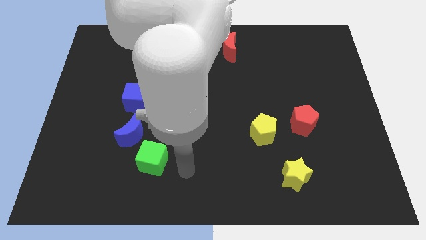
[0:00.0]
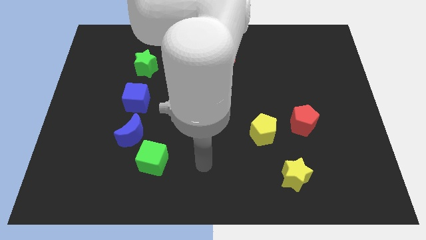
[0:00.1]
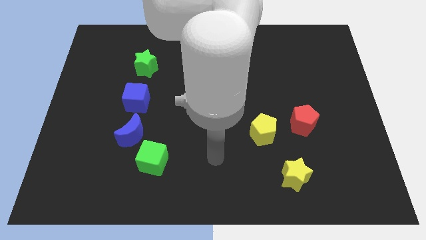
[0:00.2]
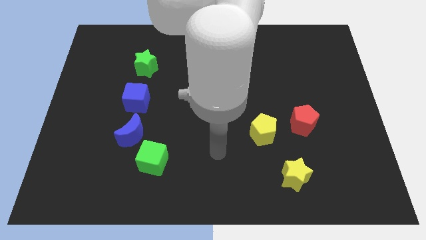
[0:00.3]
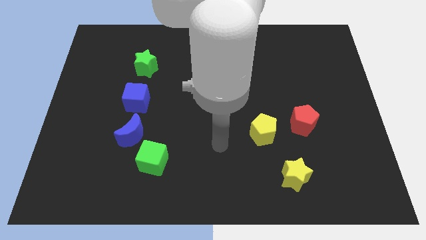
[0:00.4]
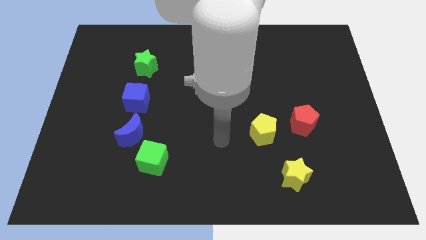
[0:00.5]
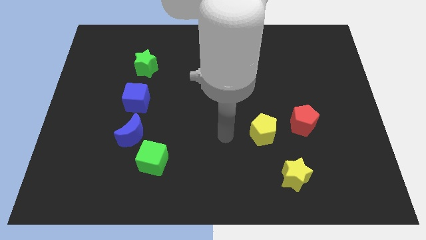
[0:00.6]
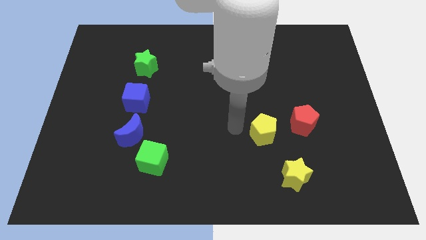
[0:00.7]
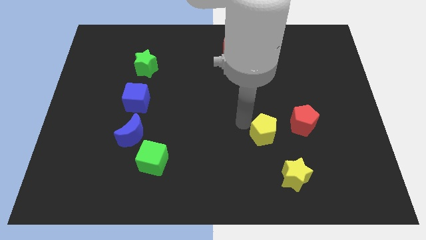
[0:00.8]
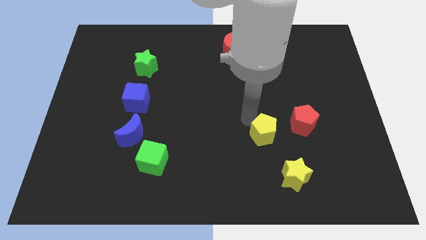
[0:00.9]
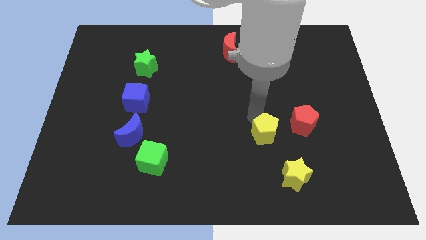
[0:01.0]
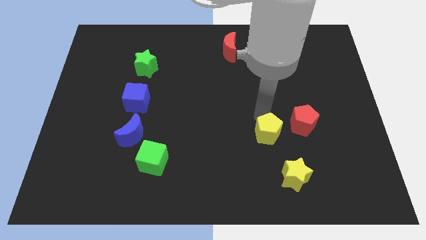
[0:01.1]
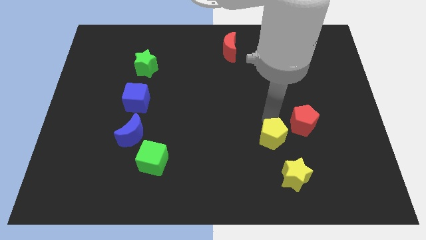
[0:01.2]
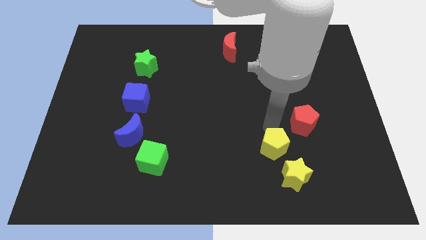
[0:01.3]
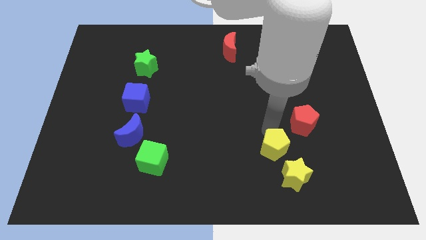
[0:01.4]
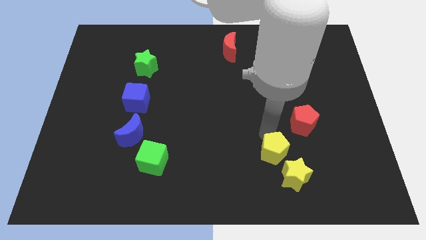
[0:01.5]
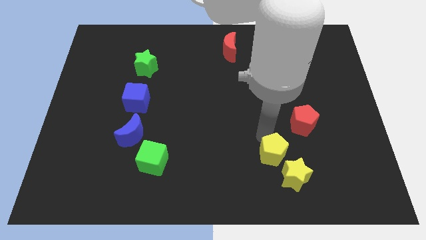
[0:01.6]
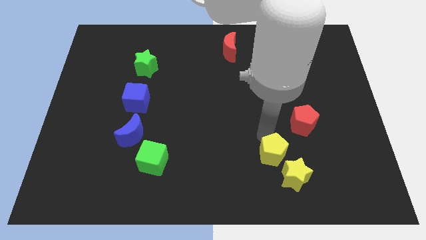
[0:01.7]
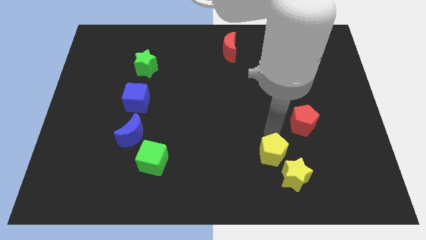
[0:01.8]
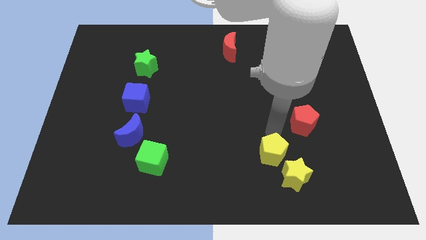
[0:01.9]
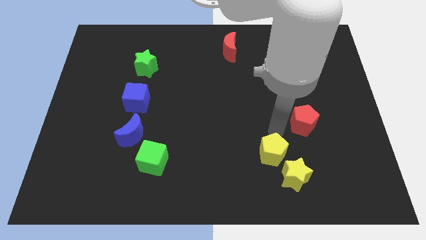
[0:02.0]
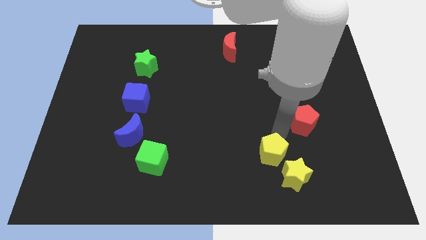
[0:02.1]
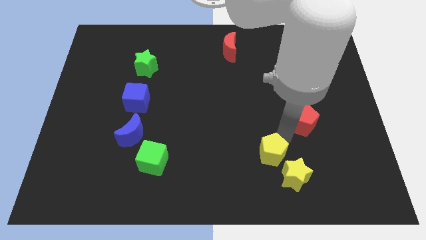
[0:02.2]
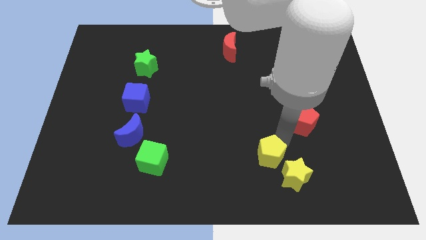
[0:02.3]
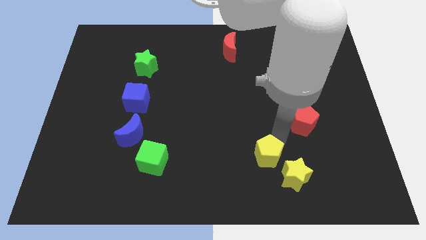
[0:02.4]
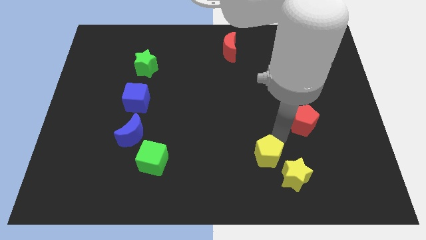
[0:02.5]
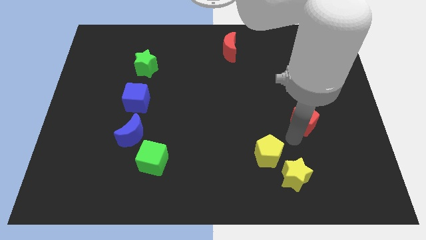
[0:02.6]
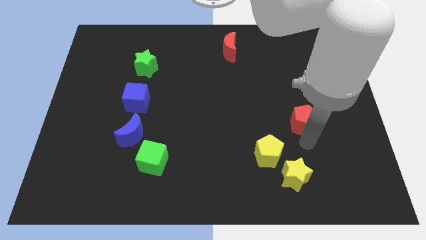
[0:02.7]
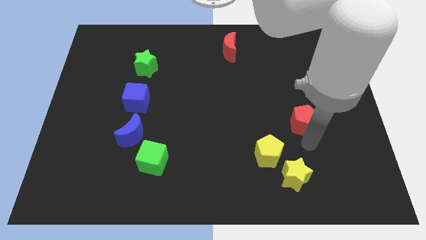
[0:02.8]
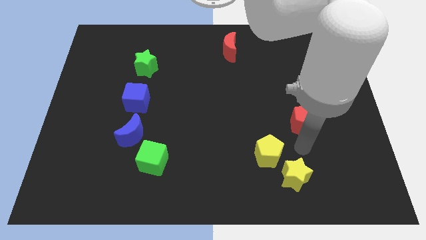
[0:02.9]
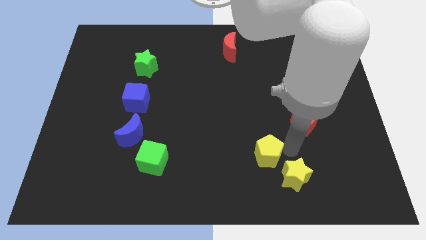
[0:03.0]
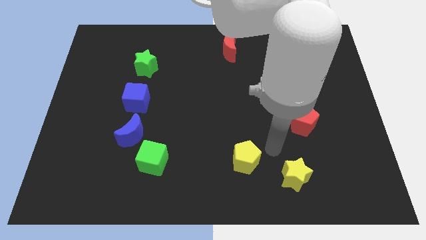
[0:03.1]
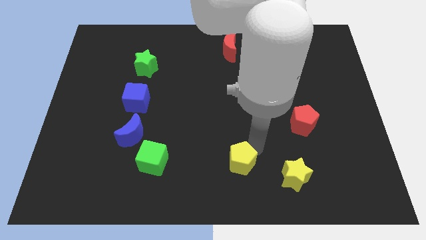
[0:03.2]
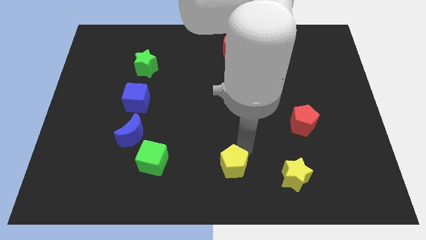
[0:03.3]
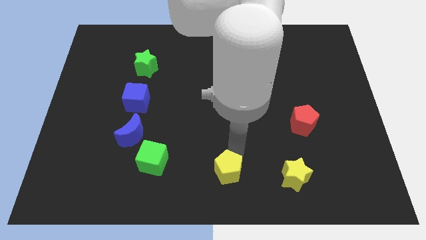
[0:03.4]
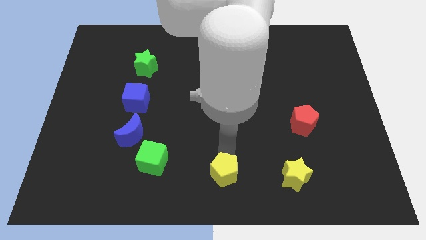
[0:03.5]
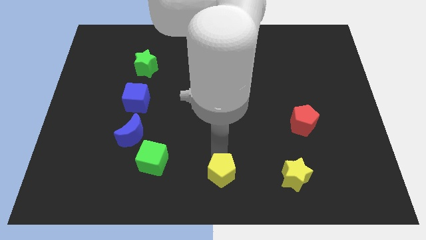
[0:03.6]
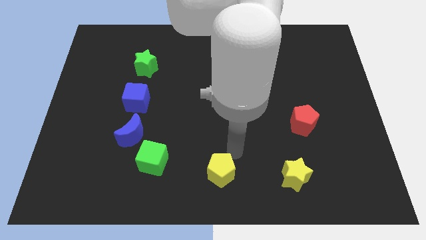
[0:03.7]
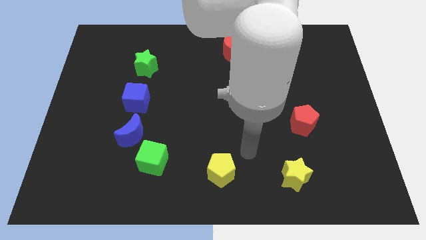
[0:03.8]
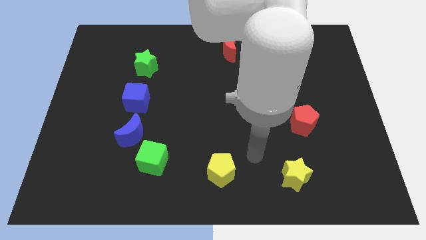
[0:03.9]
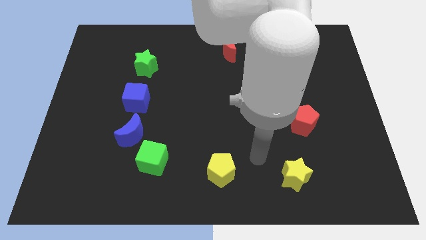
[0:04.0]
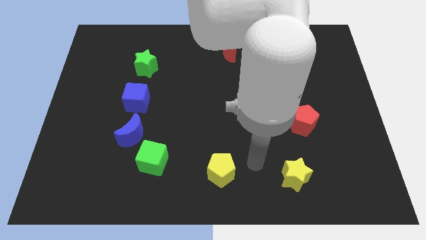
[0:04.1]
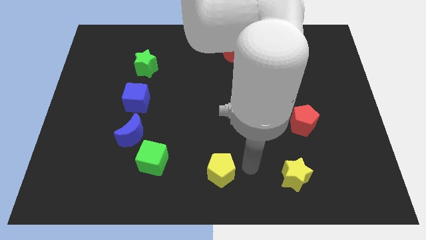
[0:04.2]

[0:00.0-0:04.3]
push the yellow pentagon to the right of the green cube

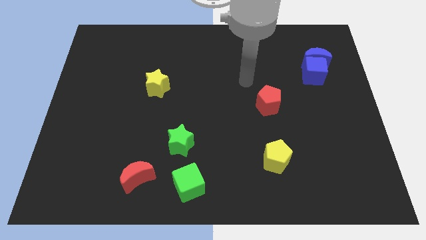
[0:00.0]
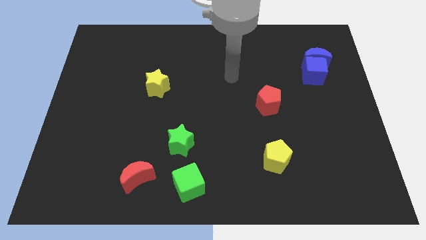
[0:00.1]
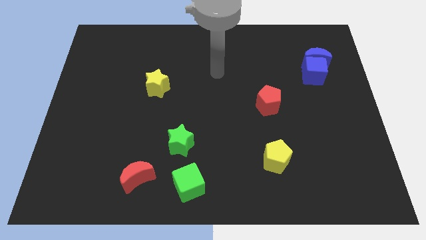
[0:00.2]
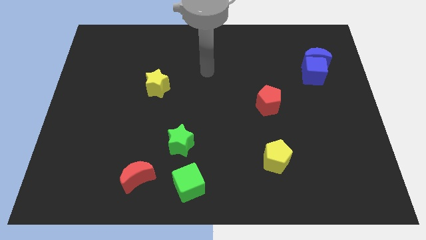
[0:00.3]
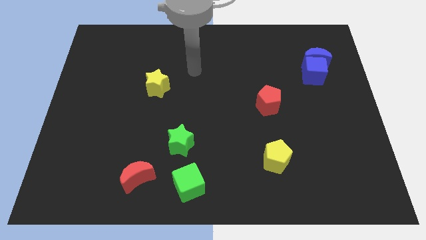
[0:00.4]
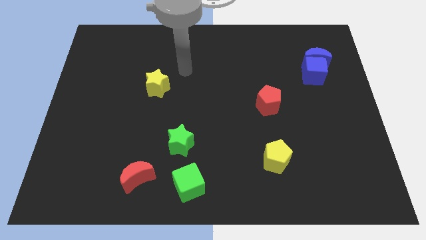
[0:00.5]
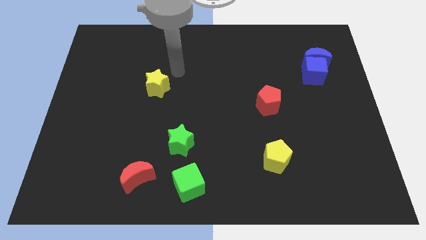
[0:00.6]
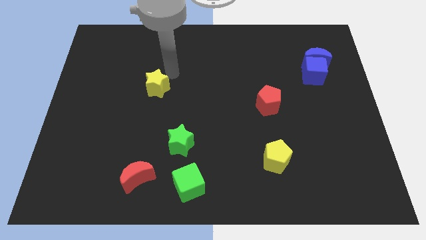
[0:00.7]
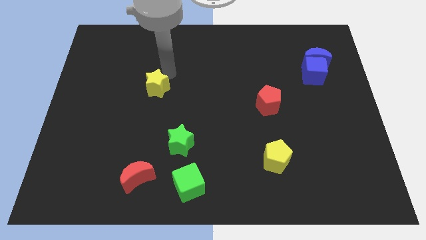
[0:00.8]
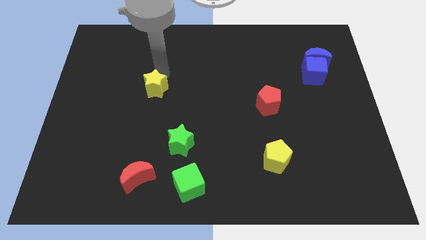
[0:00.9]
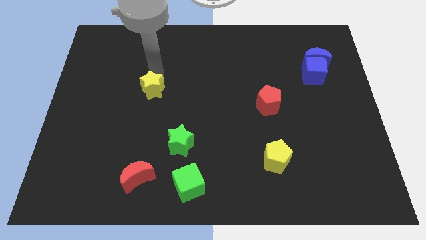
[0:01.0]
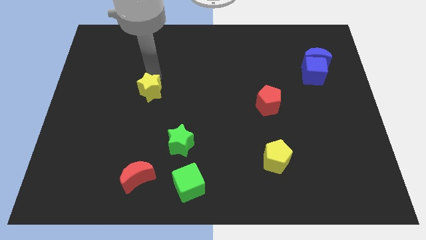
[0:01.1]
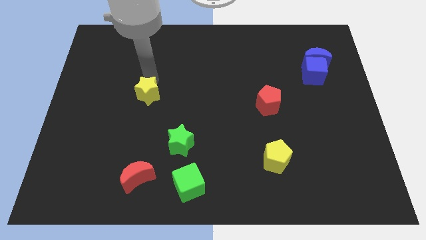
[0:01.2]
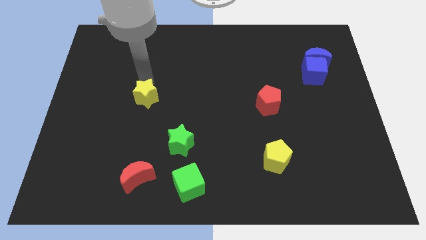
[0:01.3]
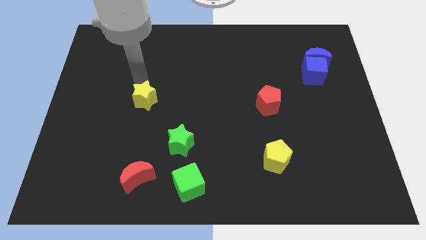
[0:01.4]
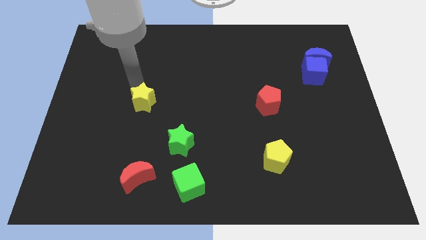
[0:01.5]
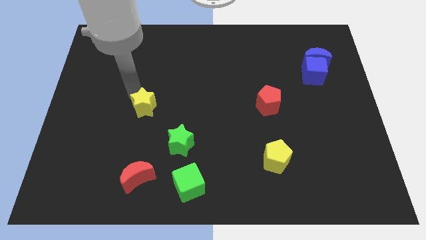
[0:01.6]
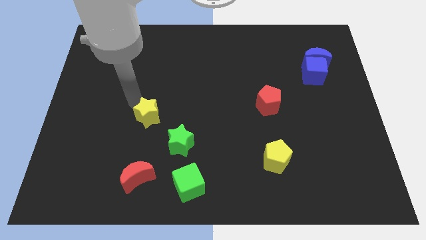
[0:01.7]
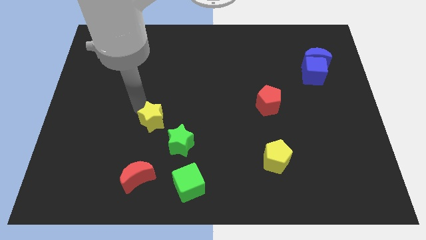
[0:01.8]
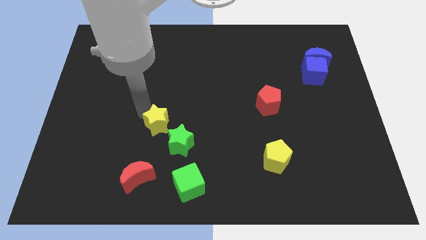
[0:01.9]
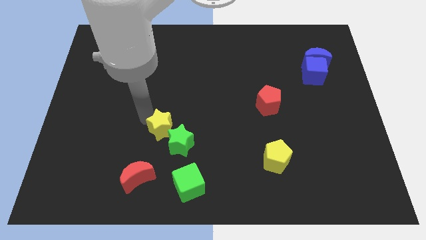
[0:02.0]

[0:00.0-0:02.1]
move the yellow star close to green star

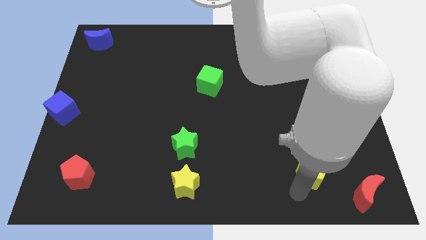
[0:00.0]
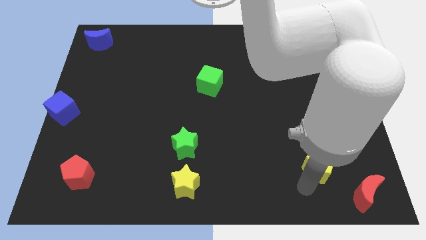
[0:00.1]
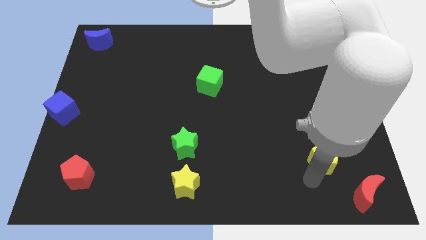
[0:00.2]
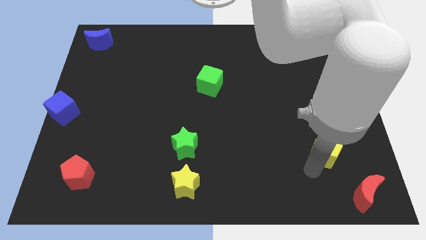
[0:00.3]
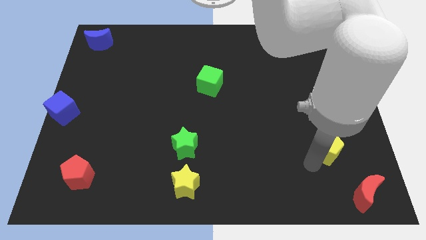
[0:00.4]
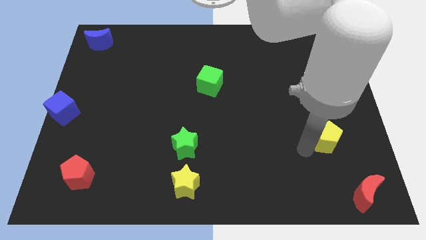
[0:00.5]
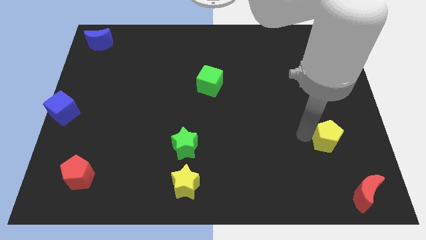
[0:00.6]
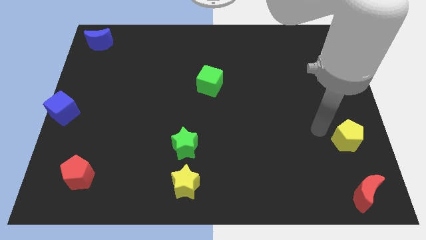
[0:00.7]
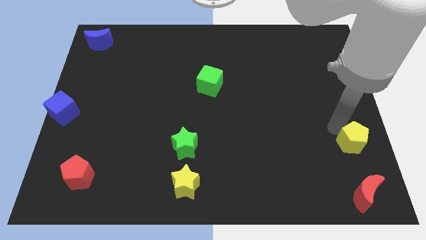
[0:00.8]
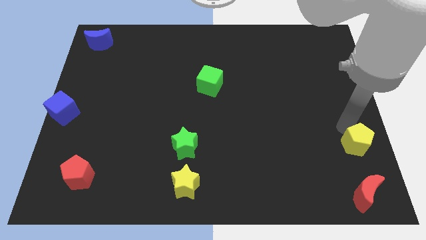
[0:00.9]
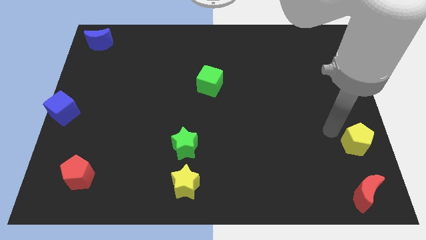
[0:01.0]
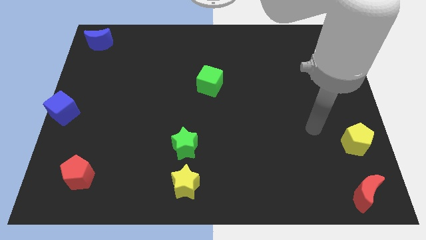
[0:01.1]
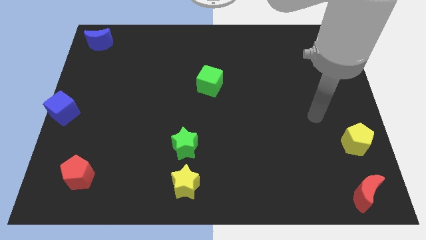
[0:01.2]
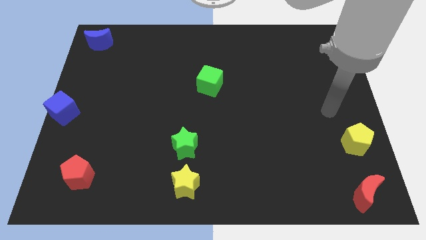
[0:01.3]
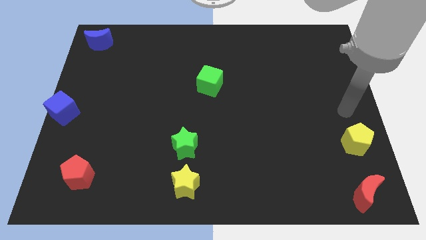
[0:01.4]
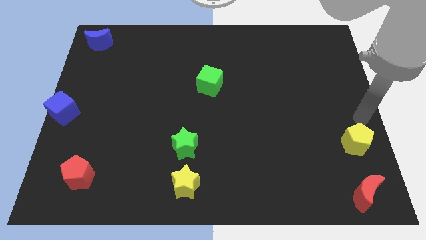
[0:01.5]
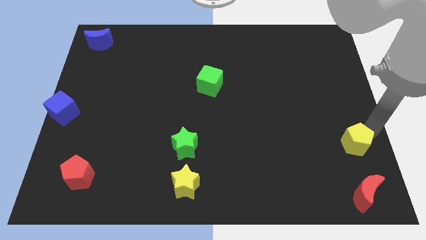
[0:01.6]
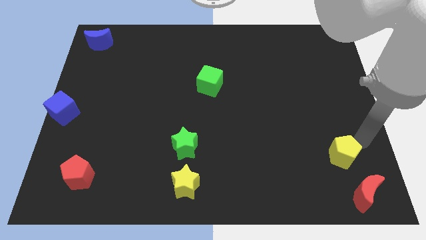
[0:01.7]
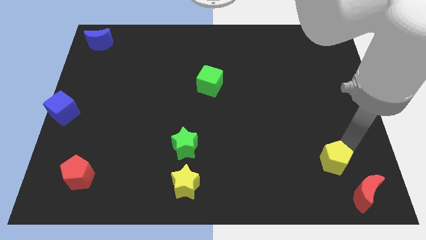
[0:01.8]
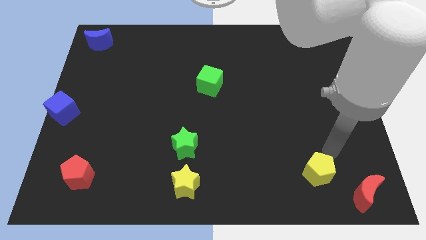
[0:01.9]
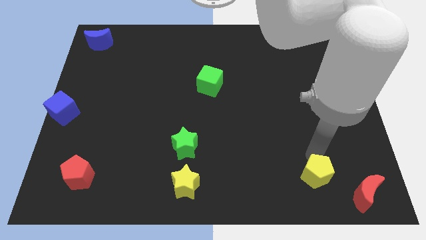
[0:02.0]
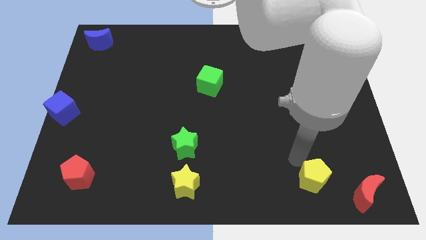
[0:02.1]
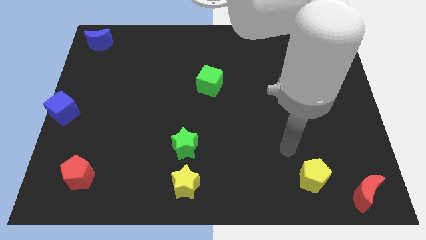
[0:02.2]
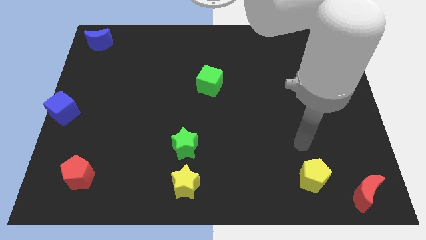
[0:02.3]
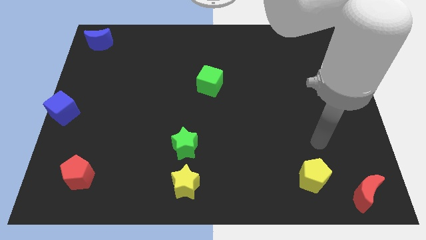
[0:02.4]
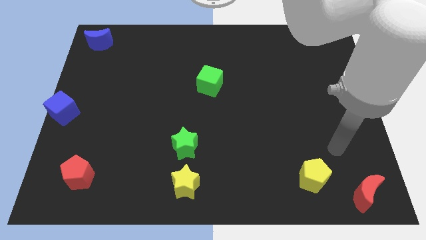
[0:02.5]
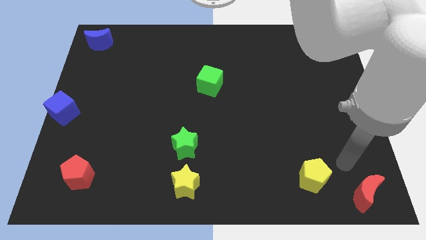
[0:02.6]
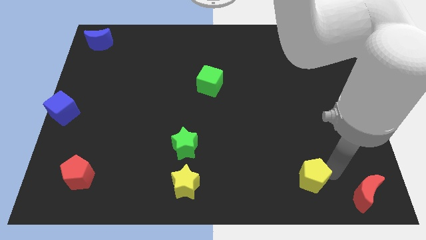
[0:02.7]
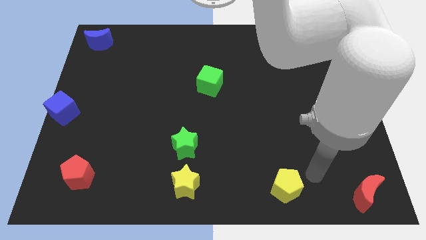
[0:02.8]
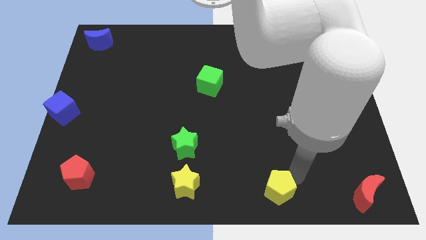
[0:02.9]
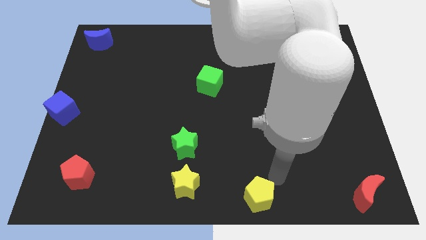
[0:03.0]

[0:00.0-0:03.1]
slide yellow pentagon to the right of yellow star
